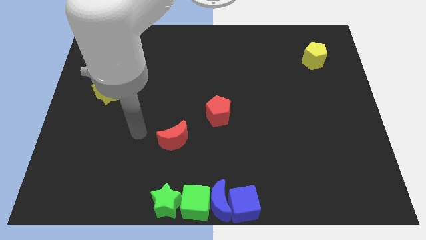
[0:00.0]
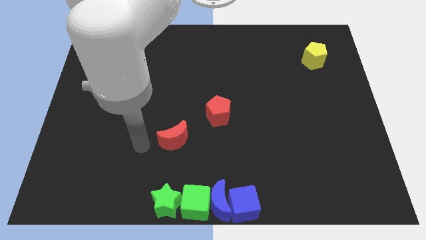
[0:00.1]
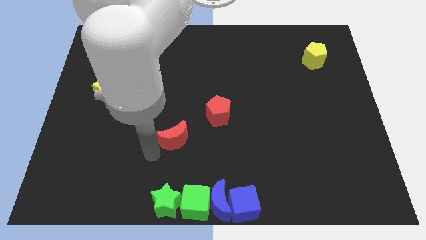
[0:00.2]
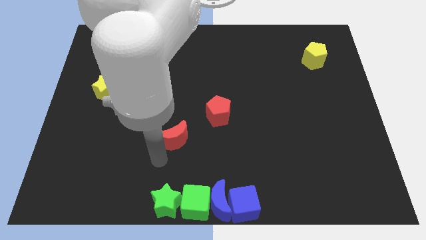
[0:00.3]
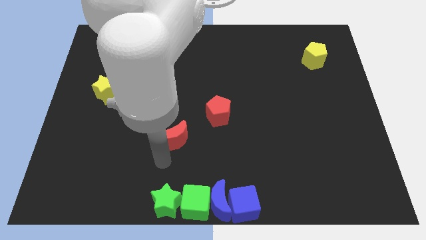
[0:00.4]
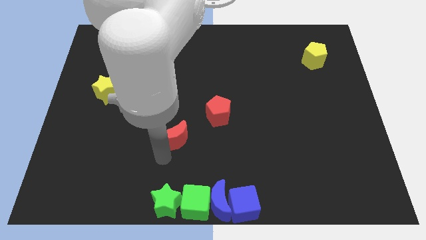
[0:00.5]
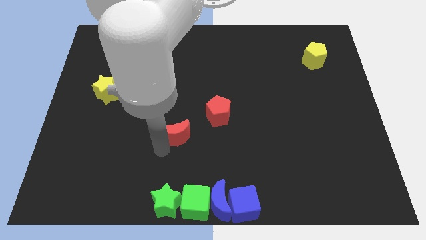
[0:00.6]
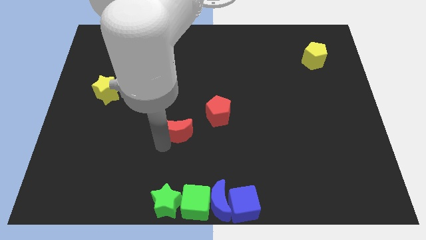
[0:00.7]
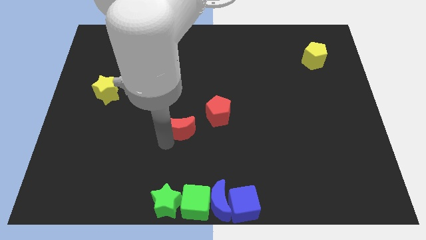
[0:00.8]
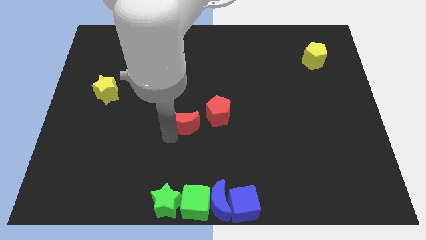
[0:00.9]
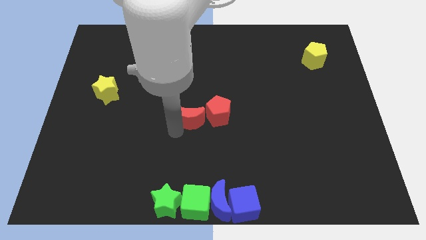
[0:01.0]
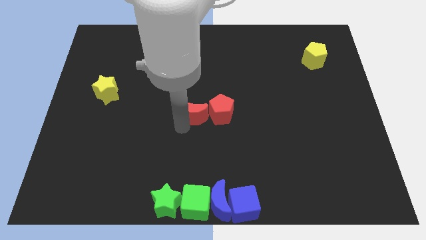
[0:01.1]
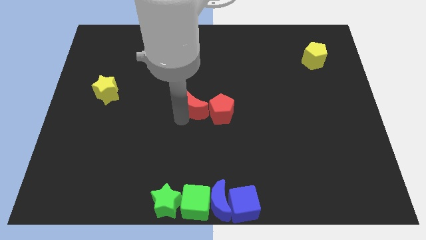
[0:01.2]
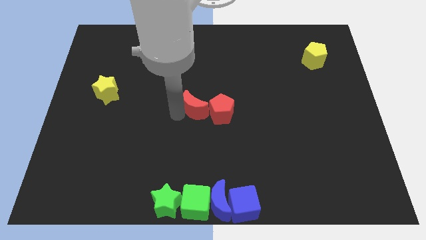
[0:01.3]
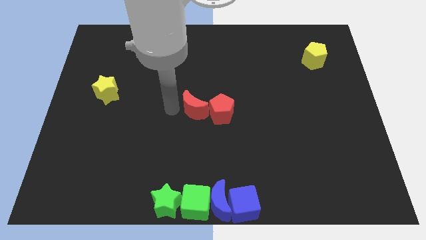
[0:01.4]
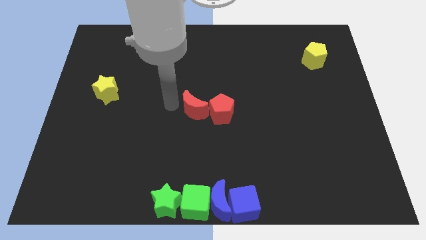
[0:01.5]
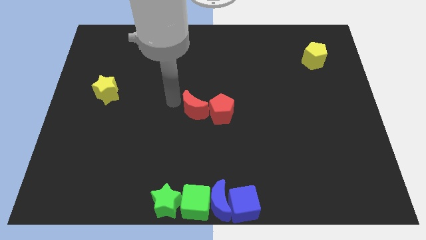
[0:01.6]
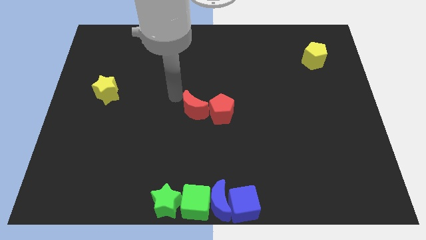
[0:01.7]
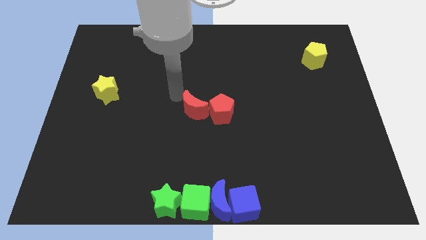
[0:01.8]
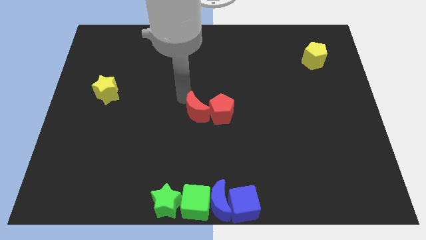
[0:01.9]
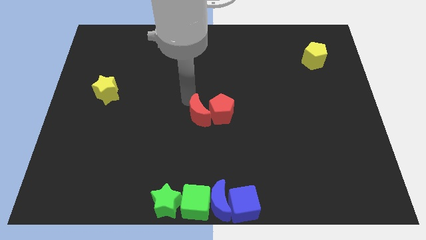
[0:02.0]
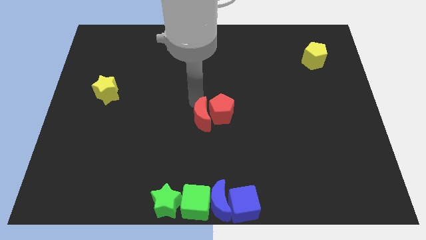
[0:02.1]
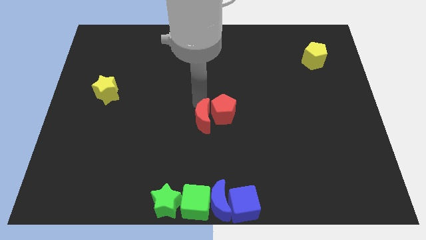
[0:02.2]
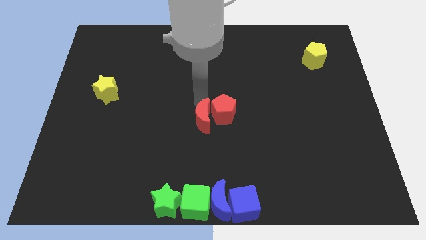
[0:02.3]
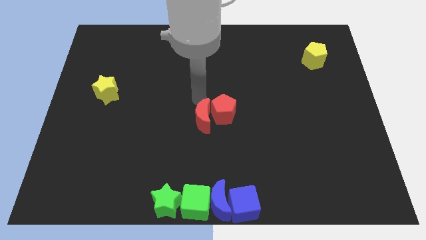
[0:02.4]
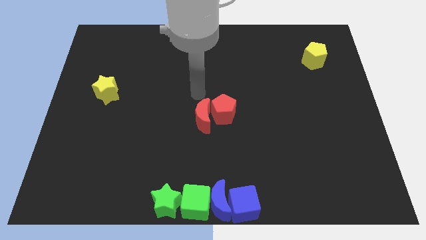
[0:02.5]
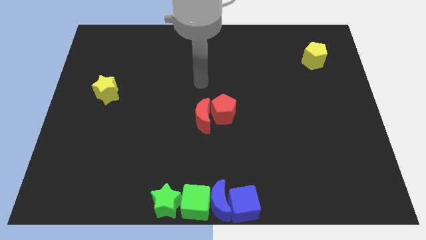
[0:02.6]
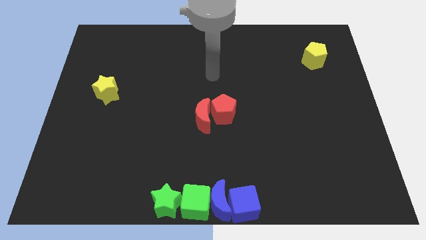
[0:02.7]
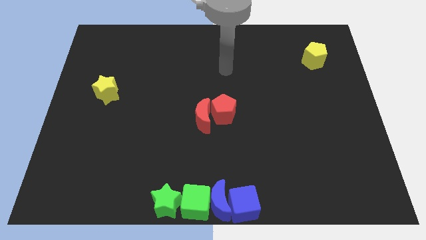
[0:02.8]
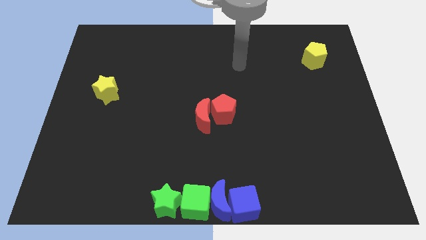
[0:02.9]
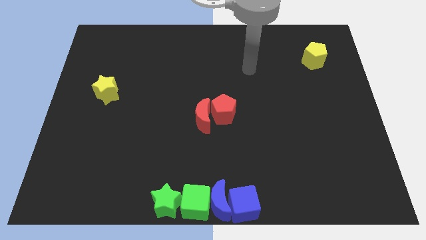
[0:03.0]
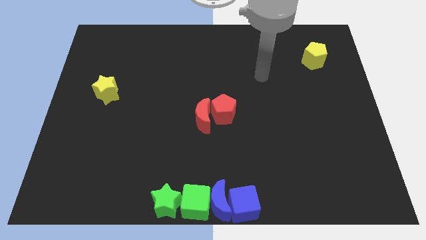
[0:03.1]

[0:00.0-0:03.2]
move the red crescent into the red pentagon

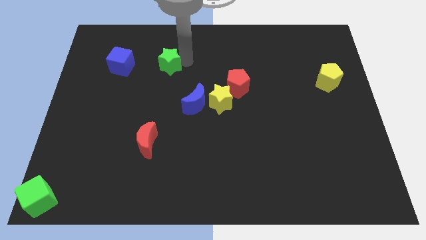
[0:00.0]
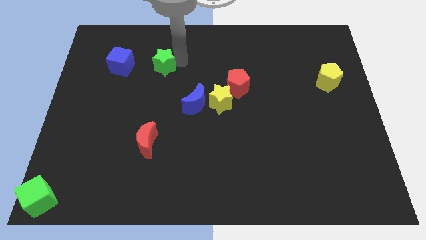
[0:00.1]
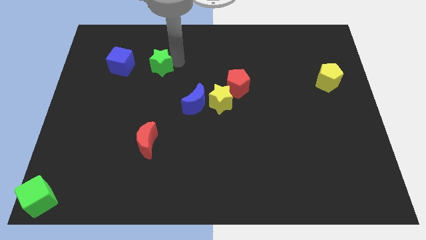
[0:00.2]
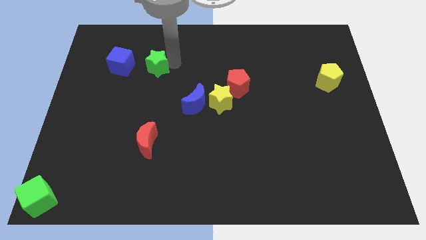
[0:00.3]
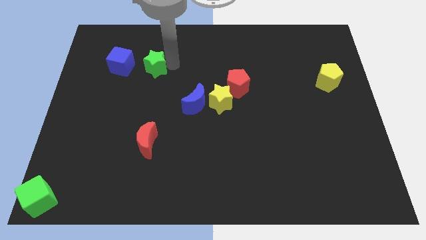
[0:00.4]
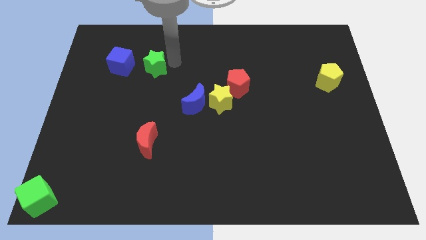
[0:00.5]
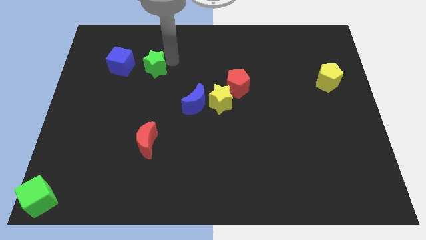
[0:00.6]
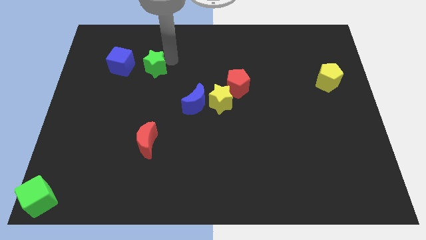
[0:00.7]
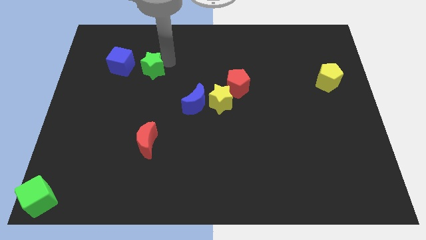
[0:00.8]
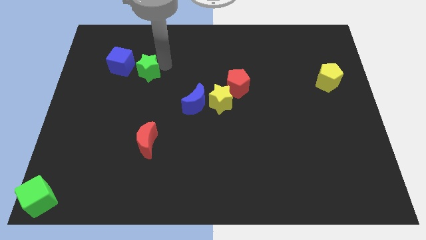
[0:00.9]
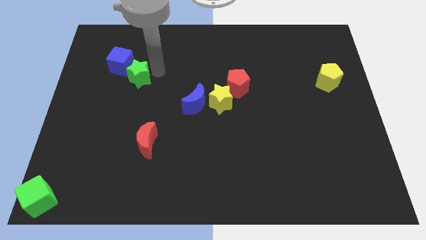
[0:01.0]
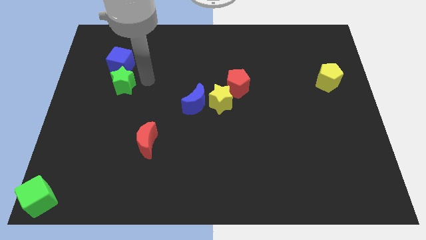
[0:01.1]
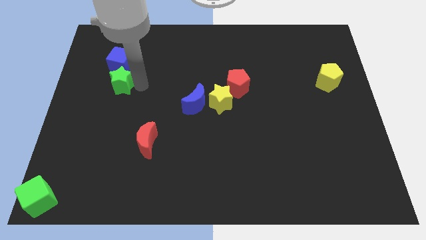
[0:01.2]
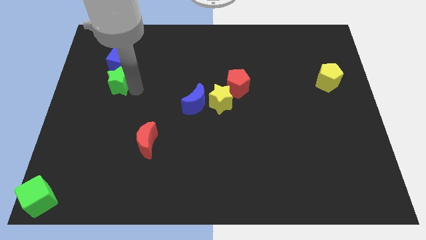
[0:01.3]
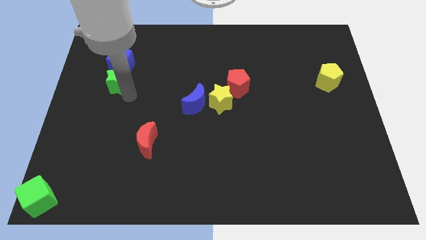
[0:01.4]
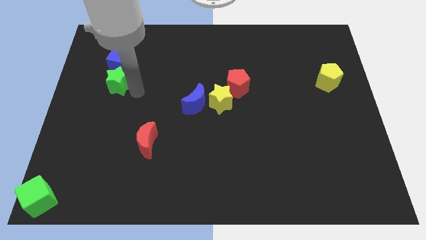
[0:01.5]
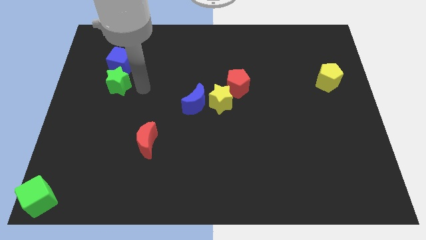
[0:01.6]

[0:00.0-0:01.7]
push green star below the blue cube

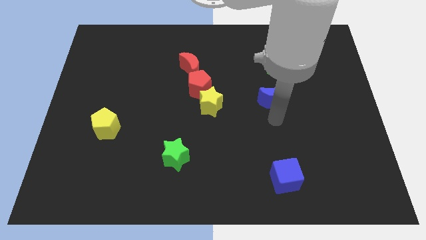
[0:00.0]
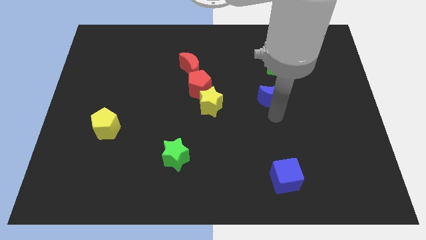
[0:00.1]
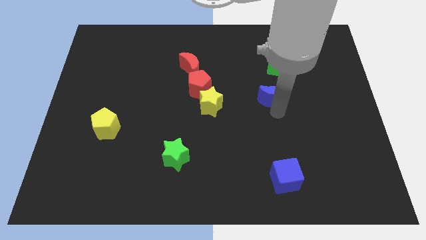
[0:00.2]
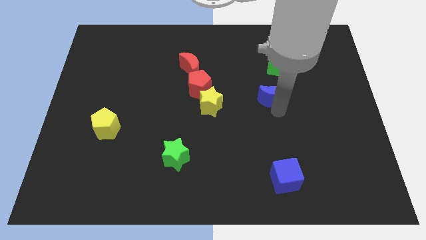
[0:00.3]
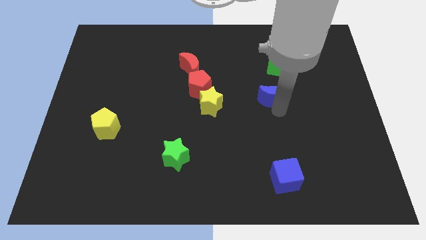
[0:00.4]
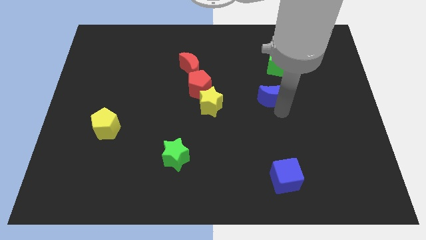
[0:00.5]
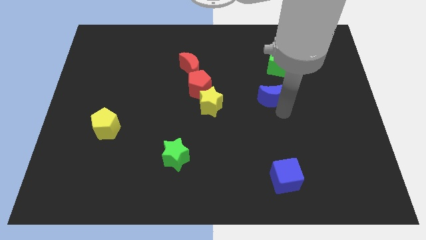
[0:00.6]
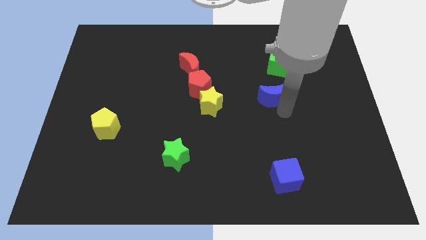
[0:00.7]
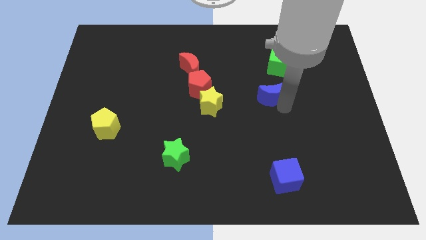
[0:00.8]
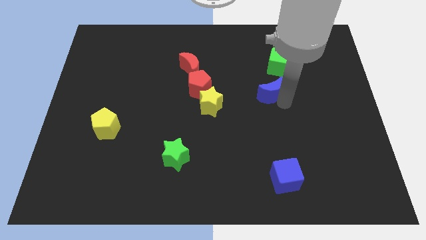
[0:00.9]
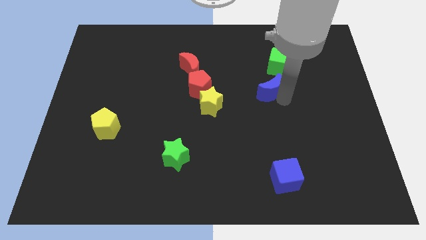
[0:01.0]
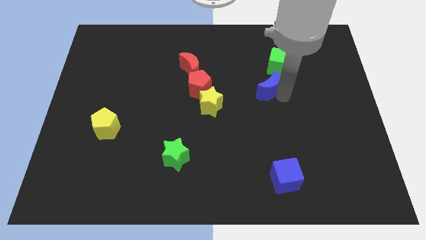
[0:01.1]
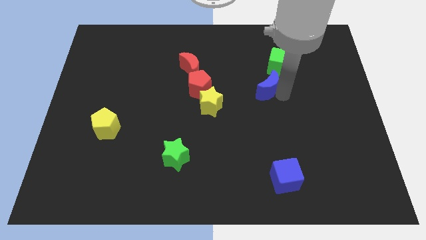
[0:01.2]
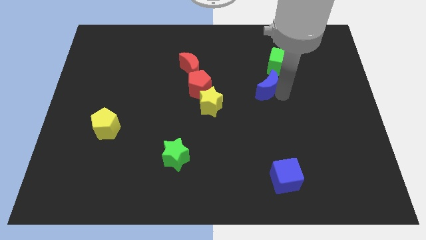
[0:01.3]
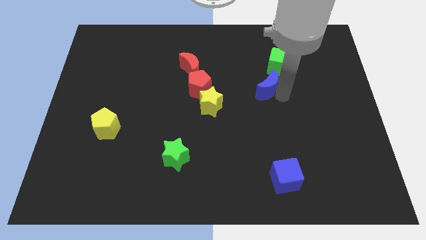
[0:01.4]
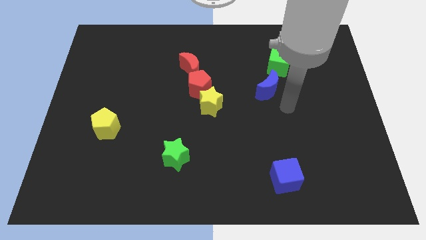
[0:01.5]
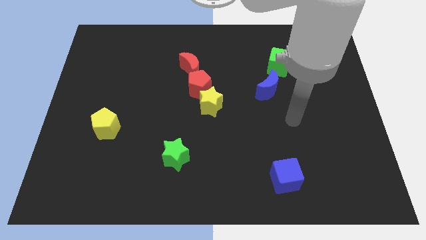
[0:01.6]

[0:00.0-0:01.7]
place blue moon to the bottom of green cube

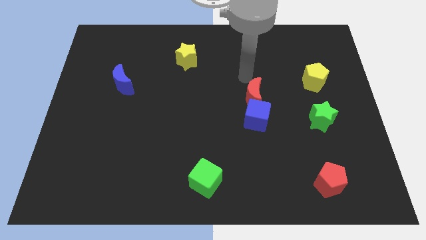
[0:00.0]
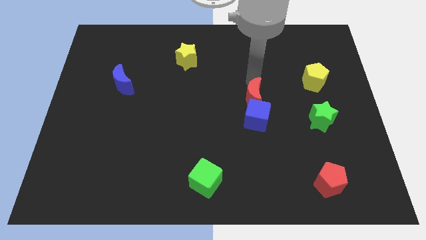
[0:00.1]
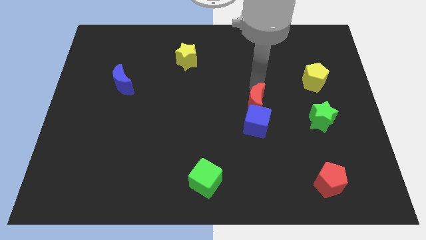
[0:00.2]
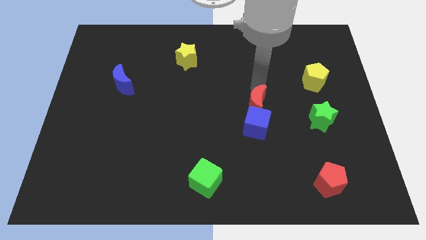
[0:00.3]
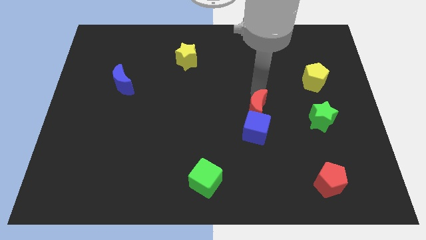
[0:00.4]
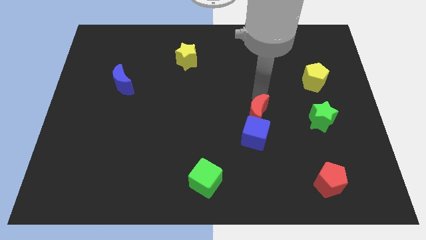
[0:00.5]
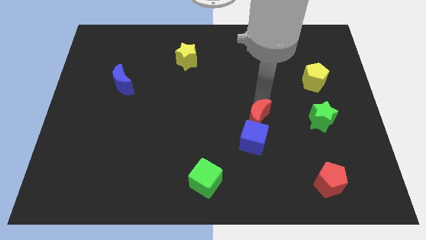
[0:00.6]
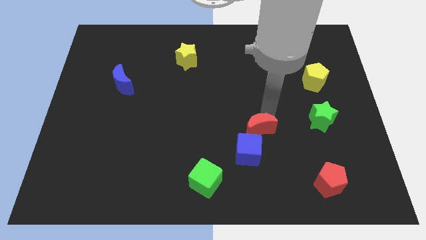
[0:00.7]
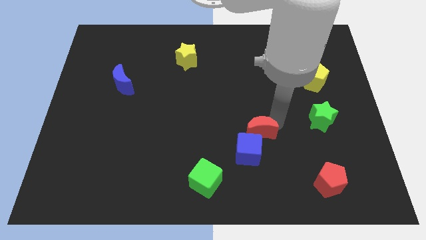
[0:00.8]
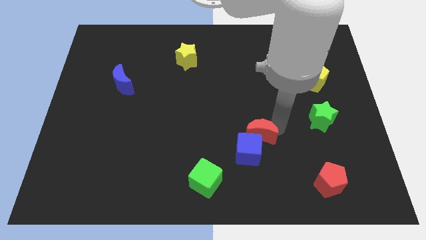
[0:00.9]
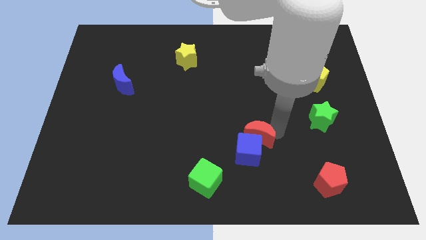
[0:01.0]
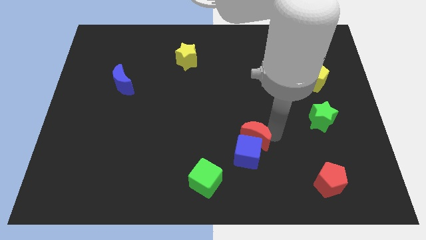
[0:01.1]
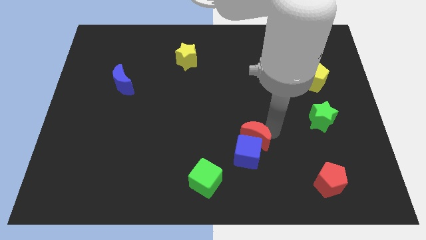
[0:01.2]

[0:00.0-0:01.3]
push the red crescent above the blue cube

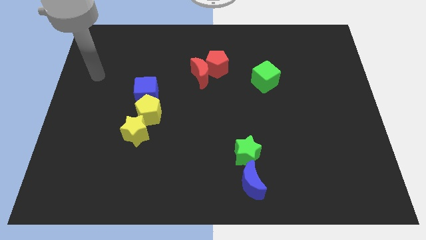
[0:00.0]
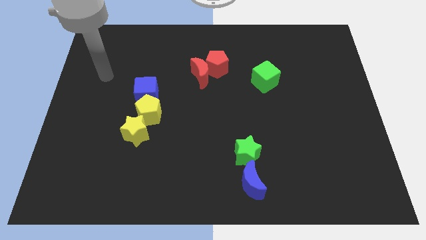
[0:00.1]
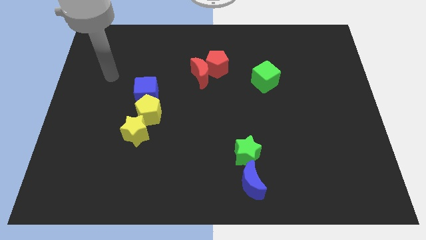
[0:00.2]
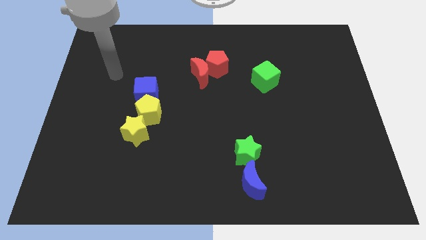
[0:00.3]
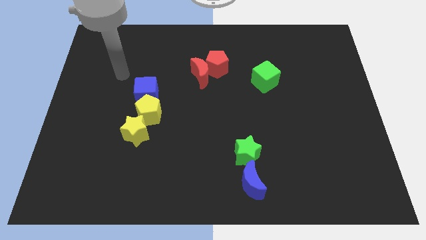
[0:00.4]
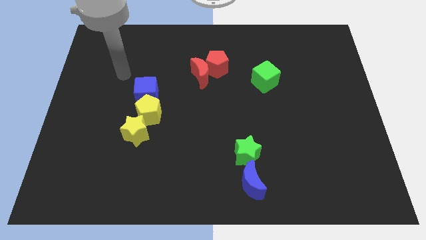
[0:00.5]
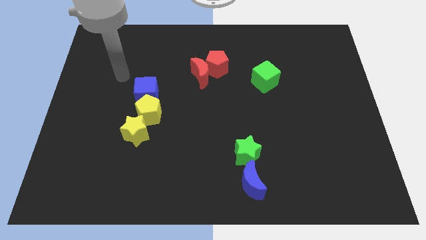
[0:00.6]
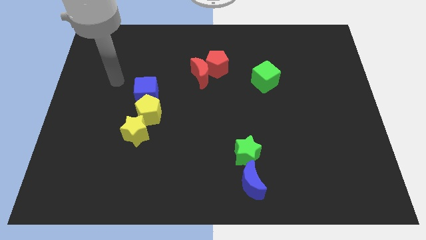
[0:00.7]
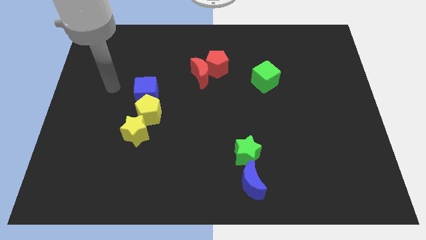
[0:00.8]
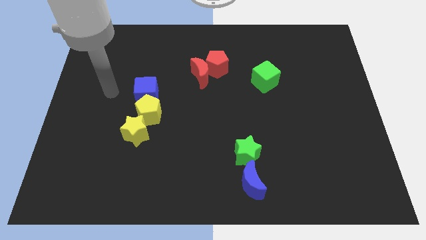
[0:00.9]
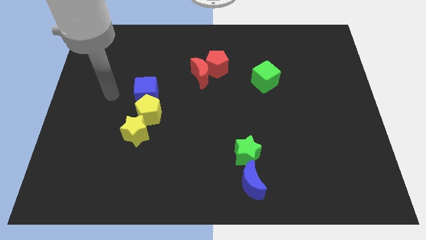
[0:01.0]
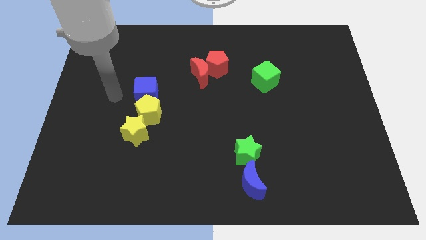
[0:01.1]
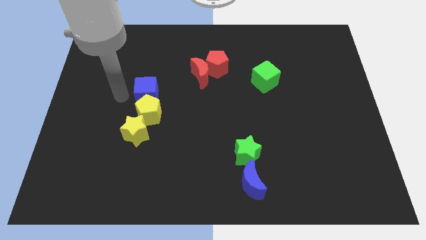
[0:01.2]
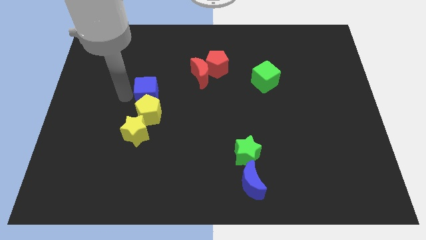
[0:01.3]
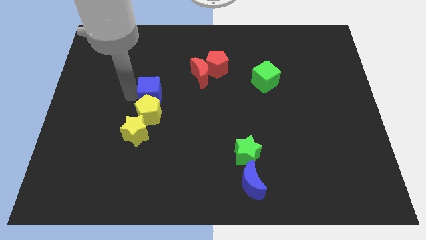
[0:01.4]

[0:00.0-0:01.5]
tap the blue cube
